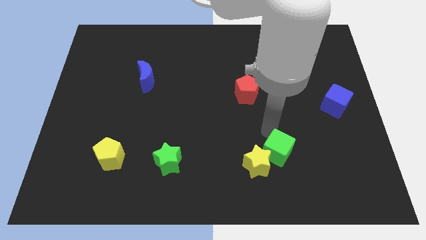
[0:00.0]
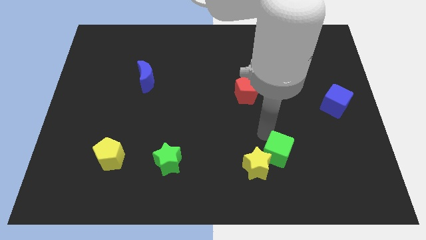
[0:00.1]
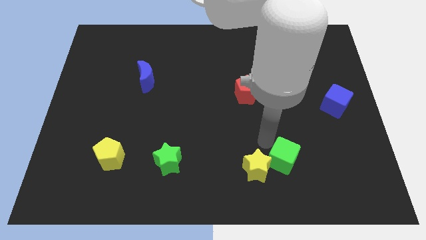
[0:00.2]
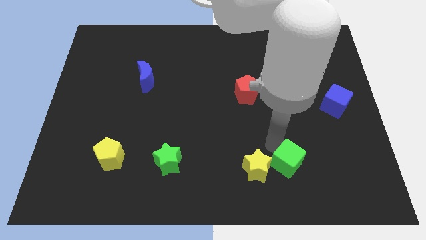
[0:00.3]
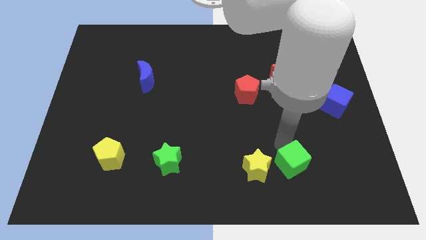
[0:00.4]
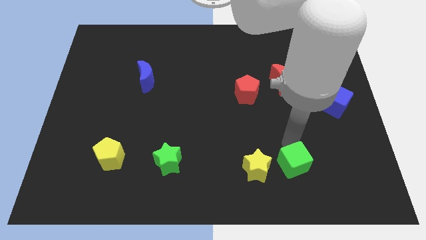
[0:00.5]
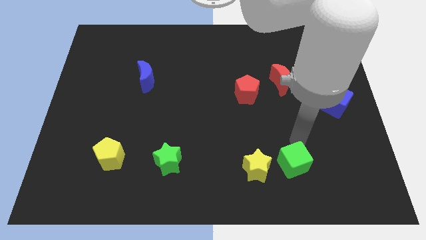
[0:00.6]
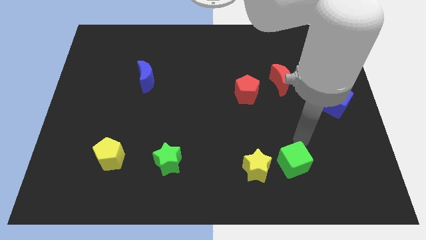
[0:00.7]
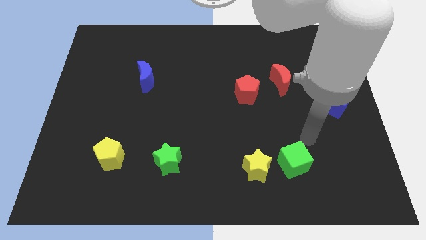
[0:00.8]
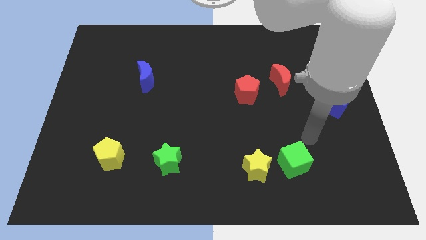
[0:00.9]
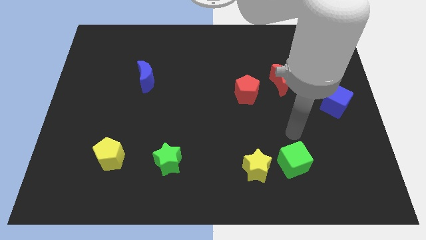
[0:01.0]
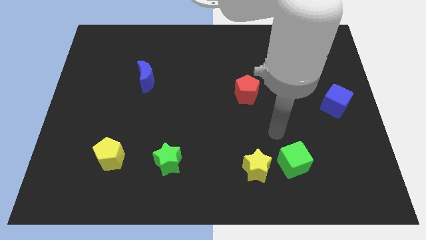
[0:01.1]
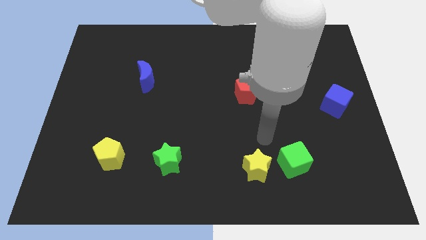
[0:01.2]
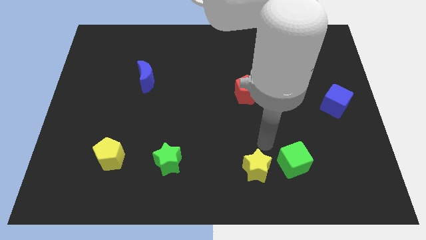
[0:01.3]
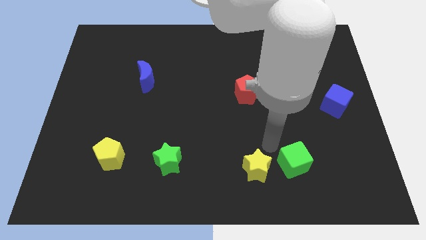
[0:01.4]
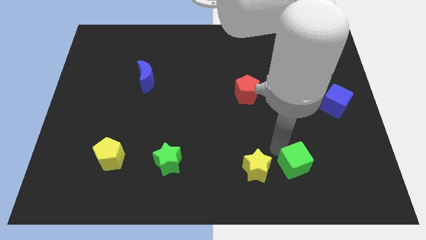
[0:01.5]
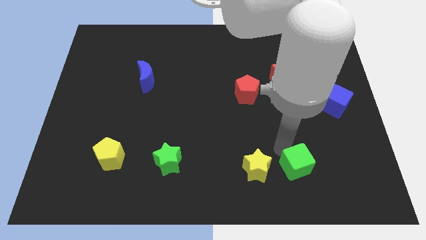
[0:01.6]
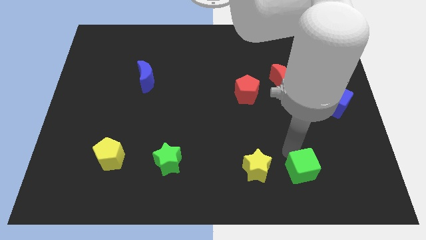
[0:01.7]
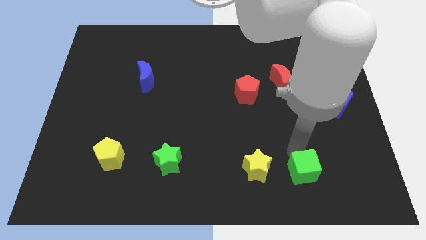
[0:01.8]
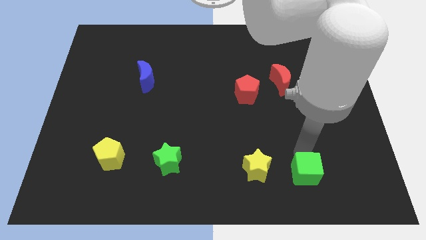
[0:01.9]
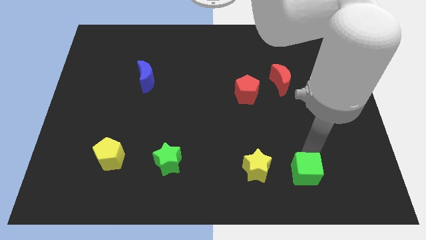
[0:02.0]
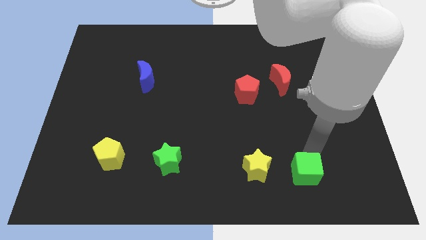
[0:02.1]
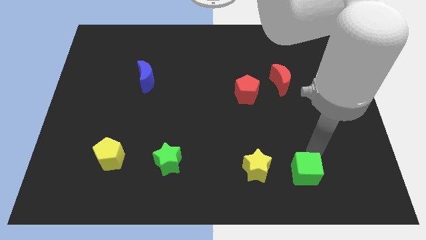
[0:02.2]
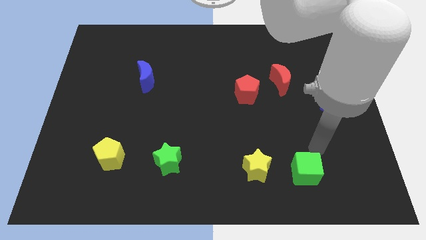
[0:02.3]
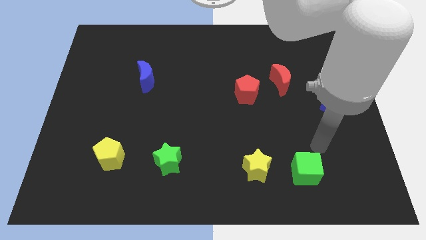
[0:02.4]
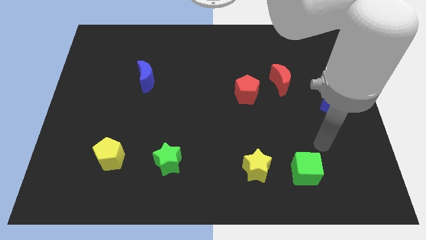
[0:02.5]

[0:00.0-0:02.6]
adjust the green cube to the right side of the yellow star

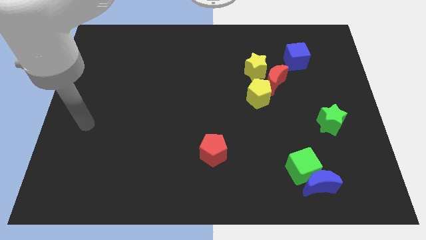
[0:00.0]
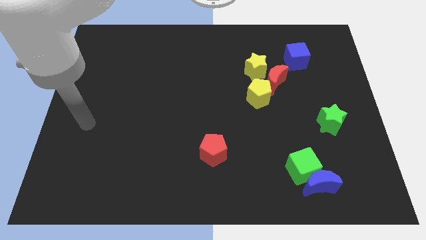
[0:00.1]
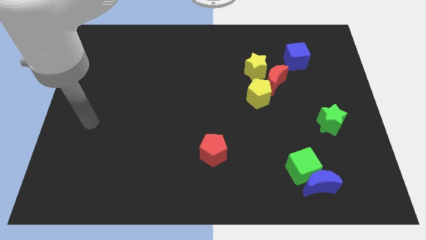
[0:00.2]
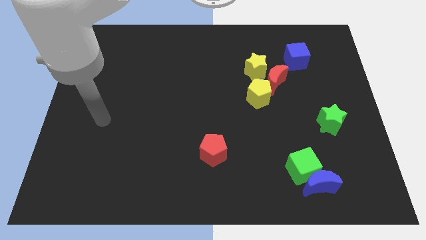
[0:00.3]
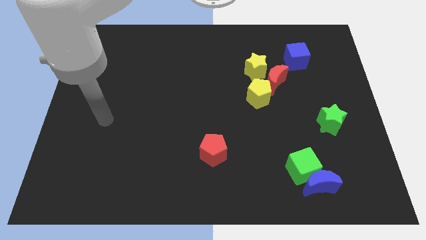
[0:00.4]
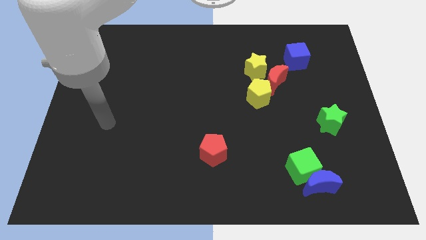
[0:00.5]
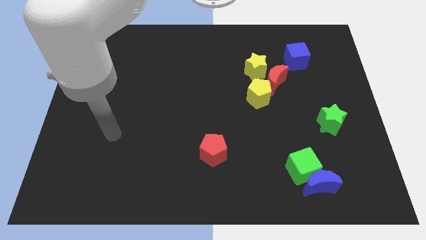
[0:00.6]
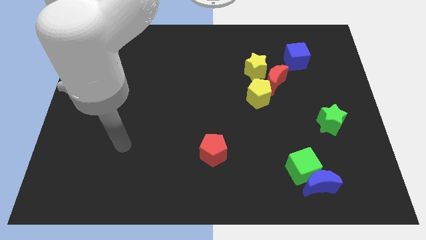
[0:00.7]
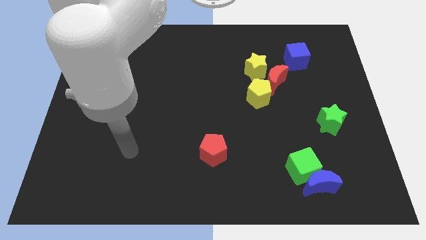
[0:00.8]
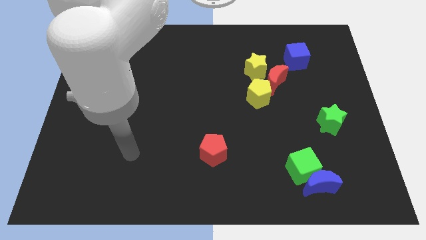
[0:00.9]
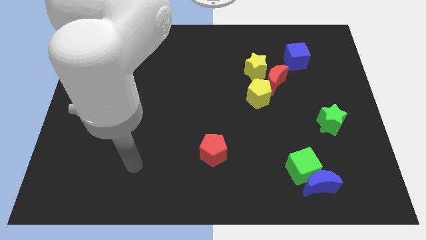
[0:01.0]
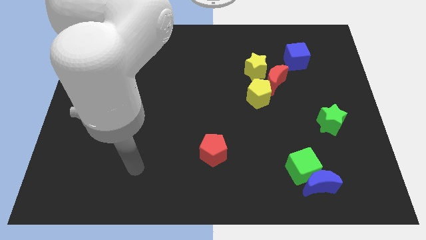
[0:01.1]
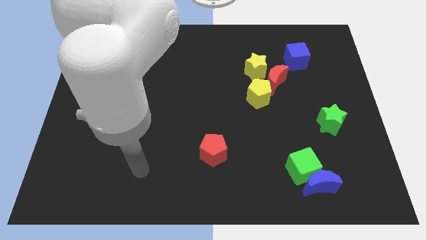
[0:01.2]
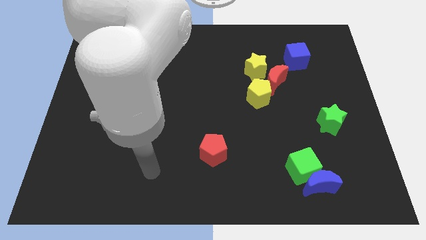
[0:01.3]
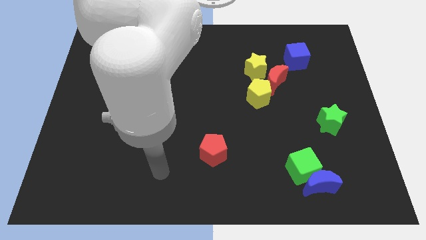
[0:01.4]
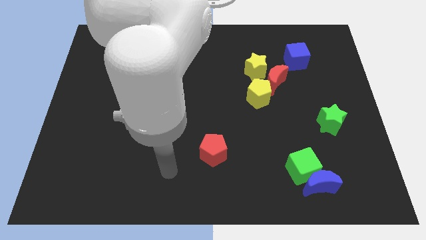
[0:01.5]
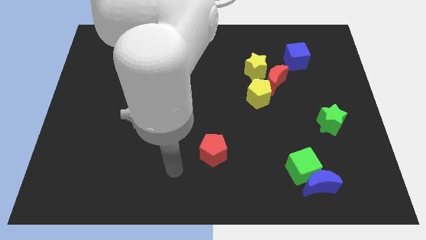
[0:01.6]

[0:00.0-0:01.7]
move your arm to the left of the red pentagon

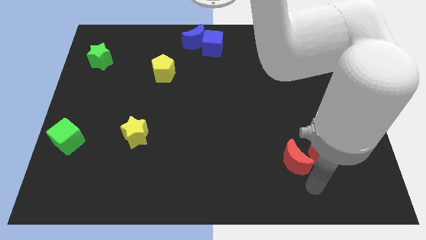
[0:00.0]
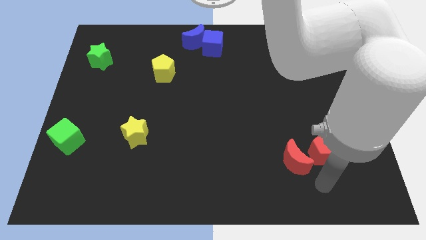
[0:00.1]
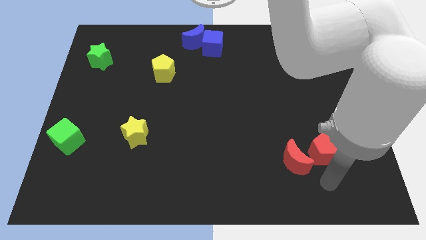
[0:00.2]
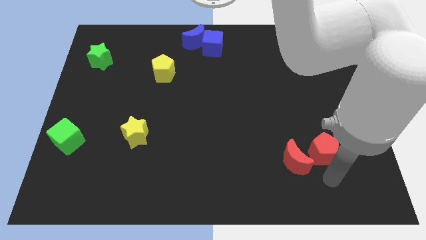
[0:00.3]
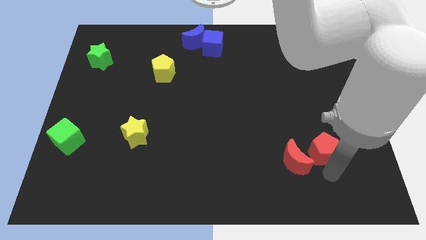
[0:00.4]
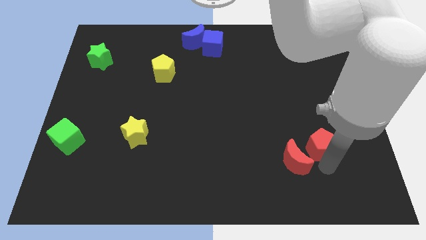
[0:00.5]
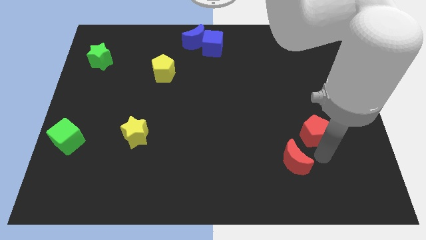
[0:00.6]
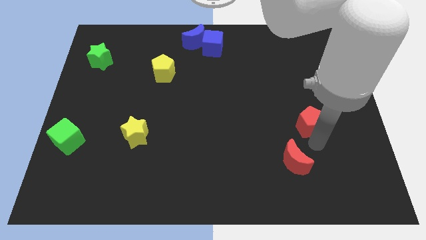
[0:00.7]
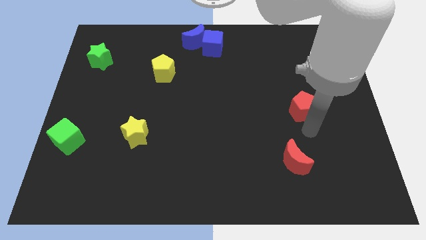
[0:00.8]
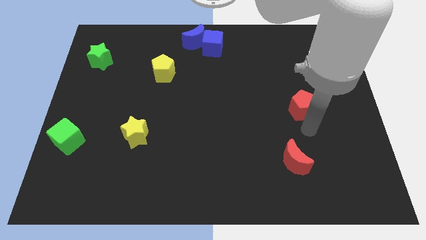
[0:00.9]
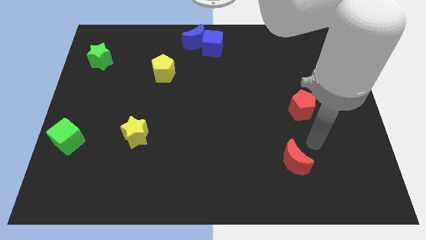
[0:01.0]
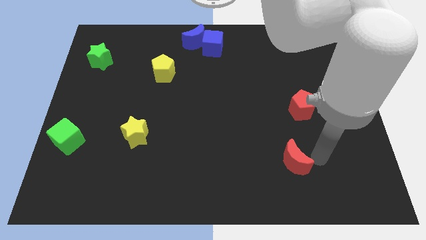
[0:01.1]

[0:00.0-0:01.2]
separate red pentagon from the red crescent

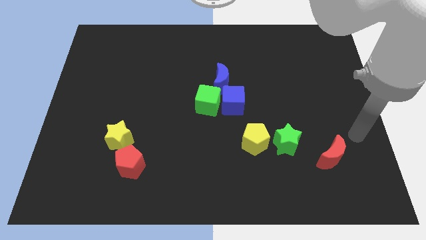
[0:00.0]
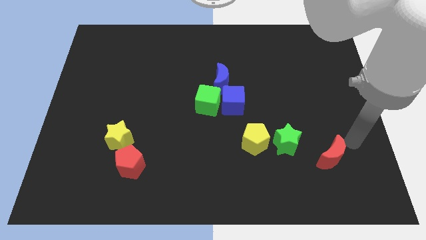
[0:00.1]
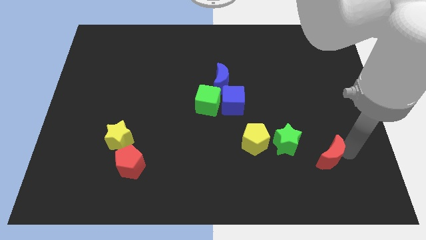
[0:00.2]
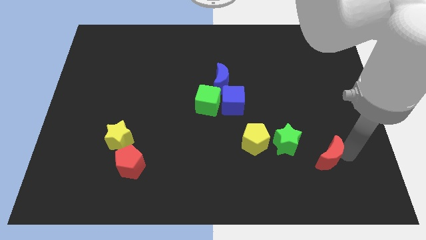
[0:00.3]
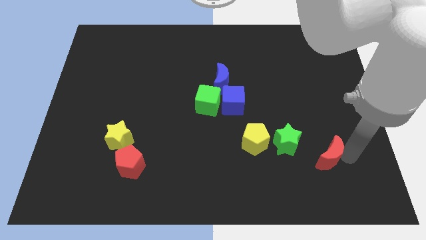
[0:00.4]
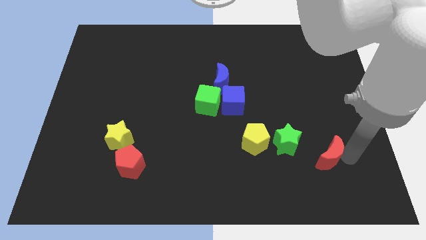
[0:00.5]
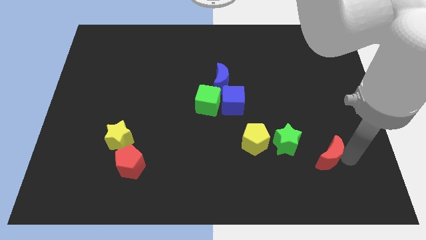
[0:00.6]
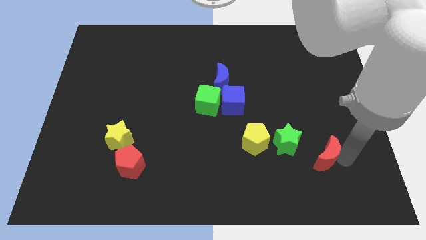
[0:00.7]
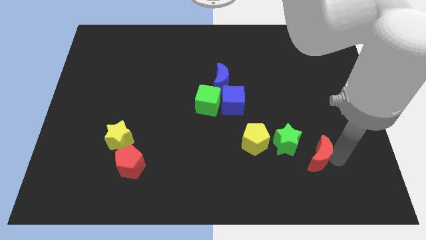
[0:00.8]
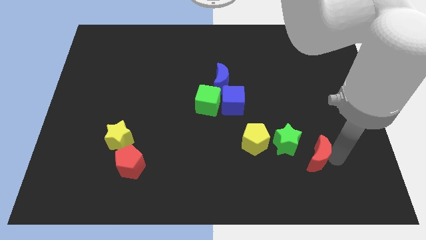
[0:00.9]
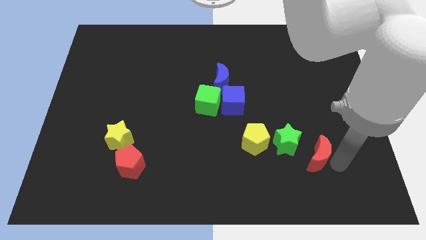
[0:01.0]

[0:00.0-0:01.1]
move red moon towards green star

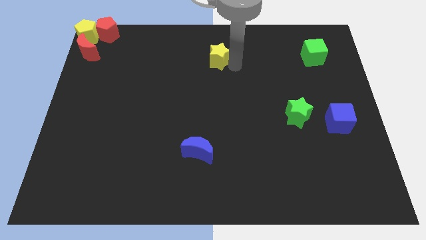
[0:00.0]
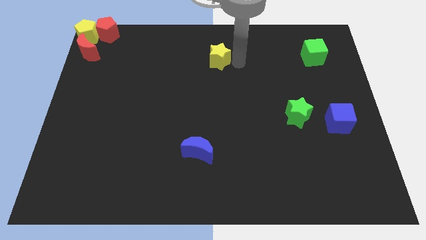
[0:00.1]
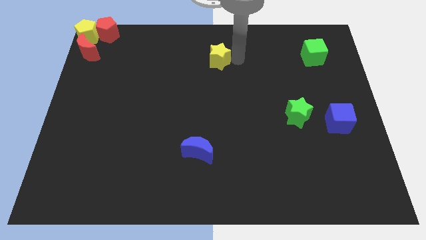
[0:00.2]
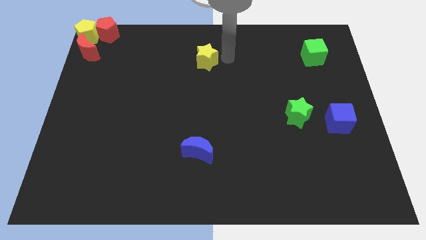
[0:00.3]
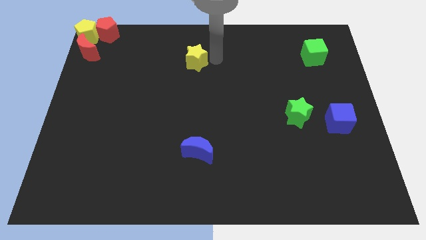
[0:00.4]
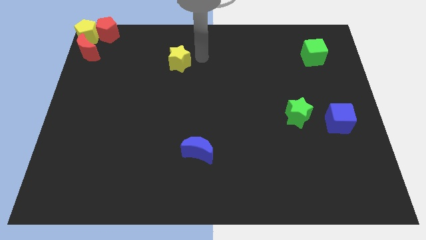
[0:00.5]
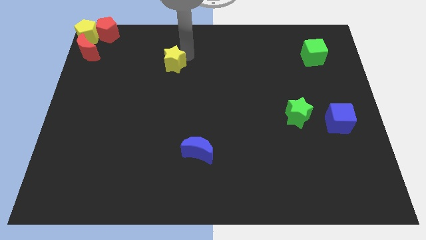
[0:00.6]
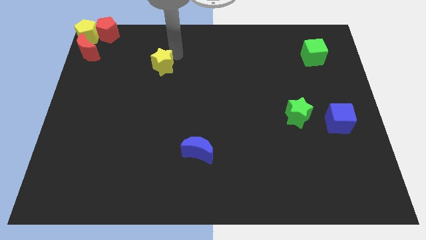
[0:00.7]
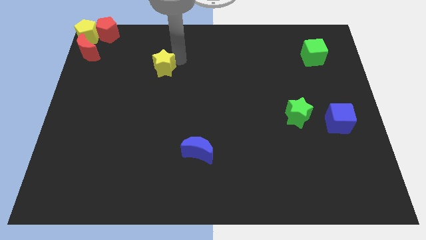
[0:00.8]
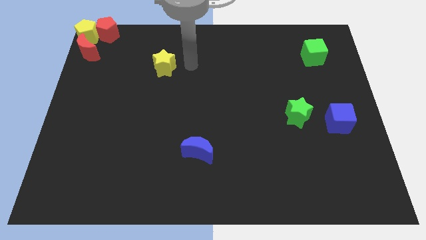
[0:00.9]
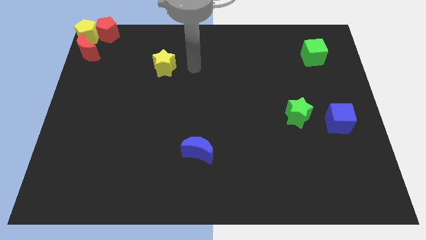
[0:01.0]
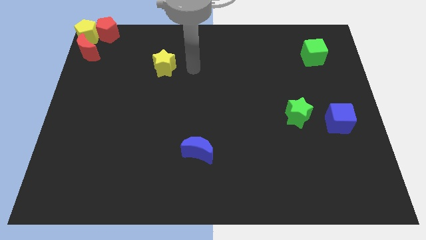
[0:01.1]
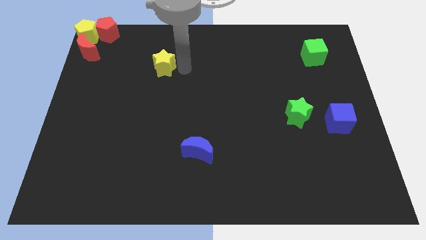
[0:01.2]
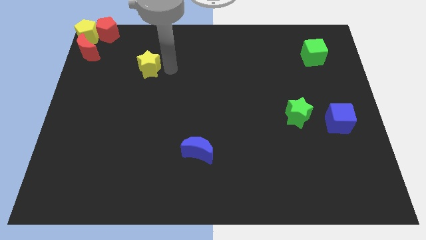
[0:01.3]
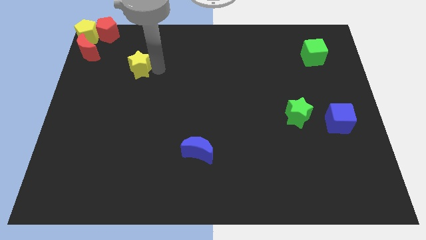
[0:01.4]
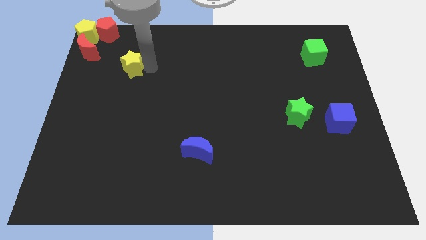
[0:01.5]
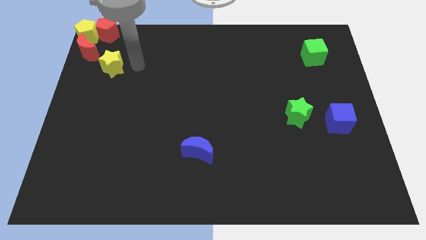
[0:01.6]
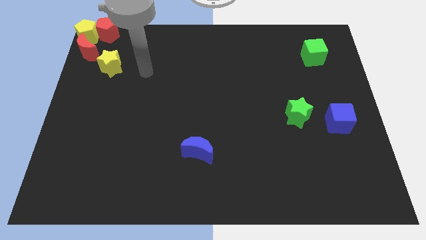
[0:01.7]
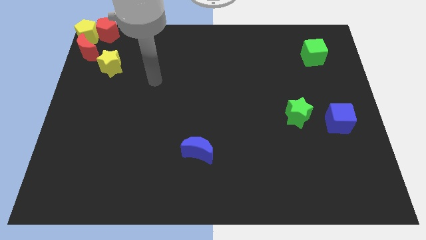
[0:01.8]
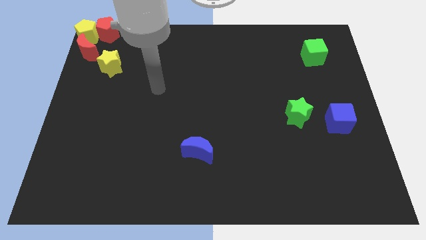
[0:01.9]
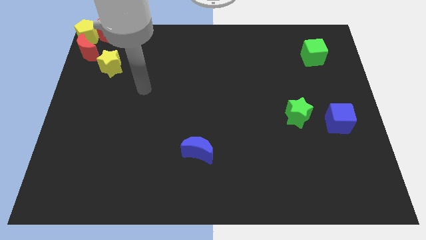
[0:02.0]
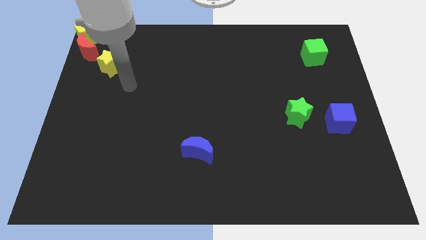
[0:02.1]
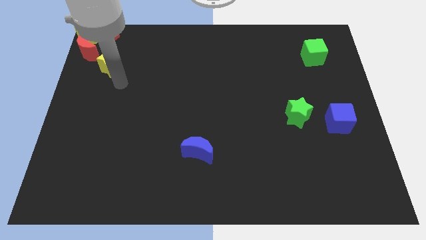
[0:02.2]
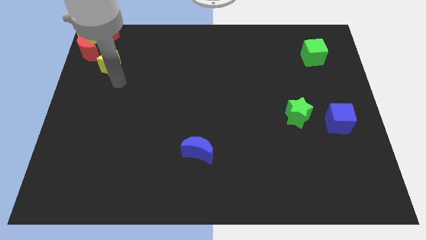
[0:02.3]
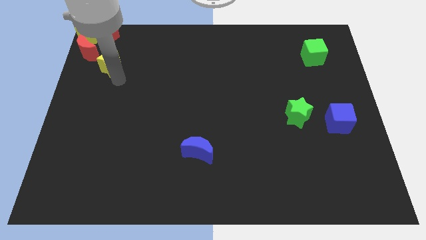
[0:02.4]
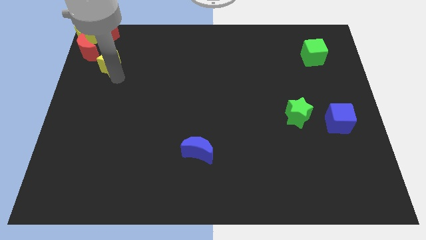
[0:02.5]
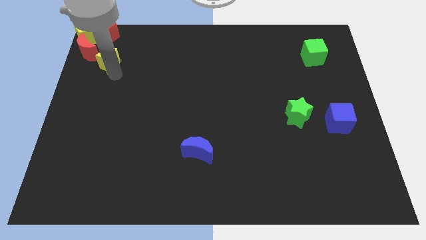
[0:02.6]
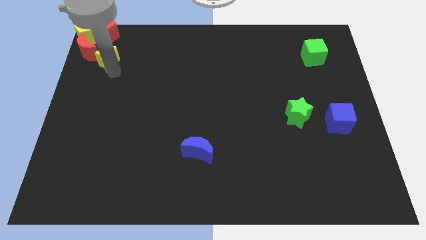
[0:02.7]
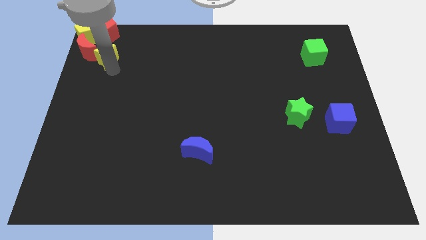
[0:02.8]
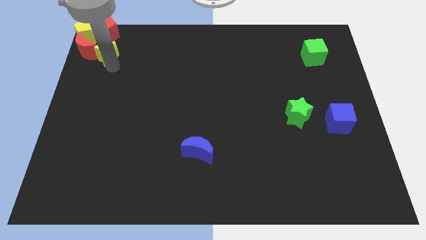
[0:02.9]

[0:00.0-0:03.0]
push the yellow star to the bottom of the red pentagon
